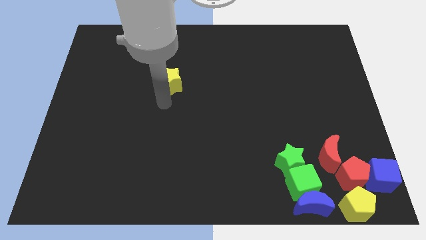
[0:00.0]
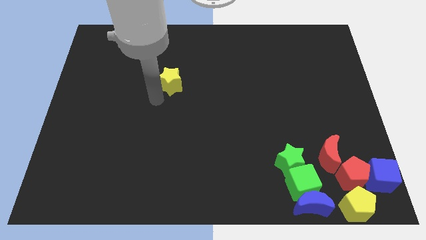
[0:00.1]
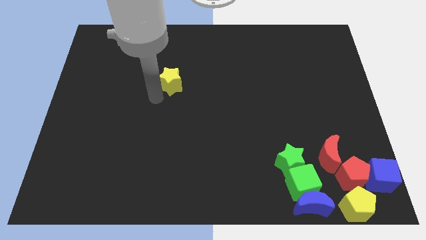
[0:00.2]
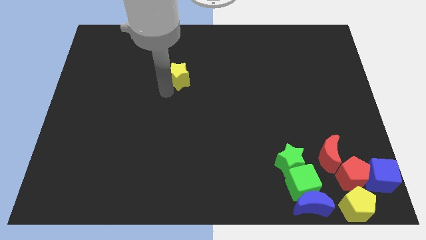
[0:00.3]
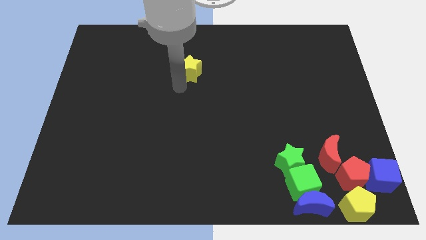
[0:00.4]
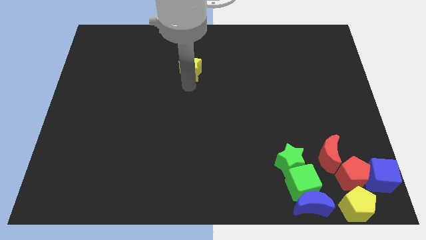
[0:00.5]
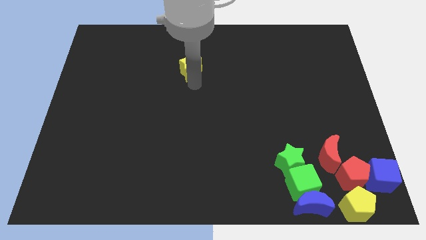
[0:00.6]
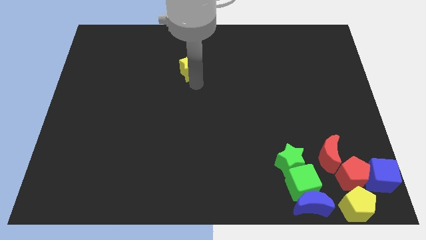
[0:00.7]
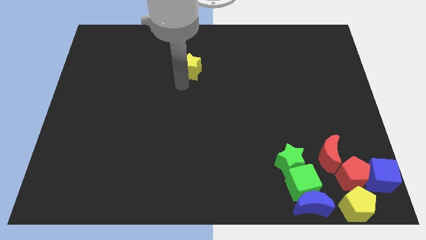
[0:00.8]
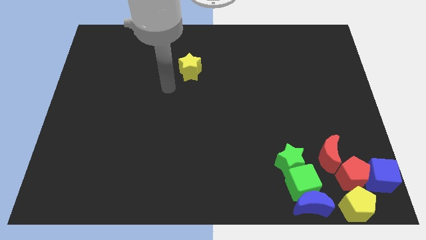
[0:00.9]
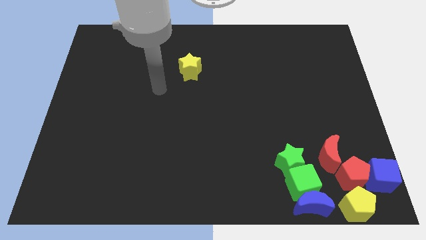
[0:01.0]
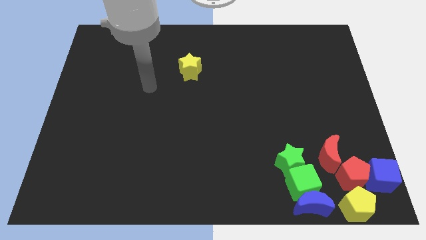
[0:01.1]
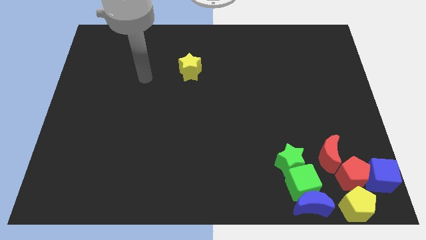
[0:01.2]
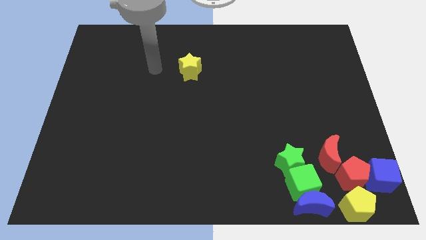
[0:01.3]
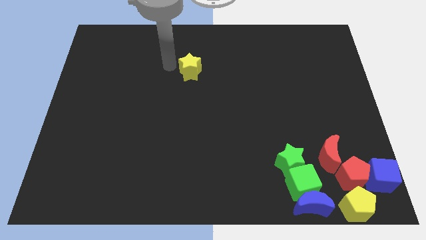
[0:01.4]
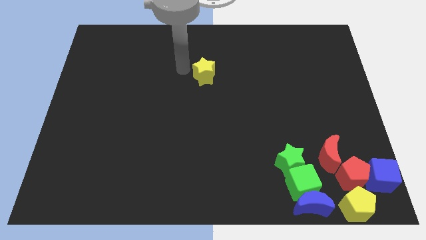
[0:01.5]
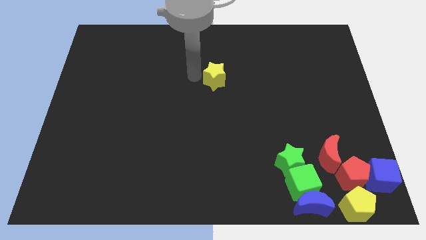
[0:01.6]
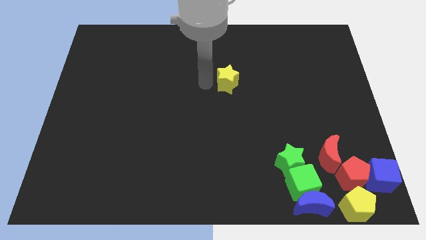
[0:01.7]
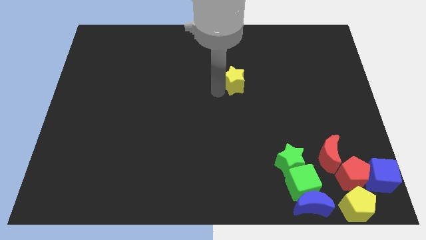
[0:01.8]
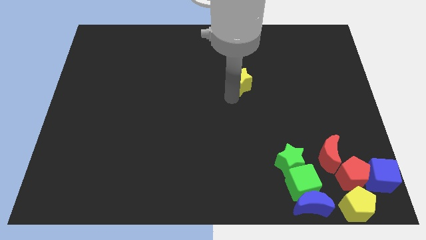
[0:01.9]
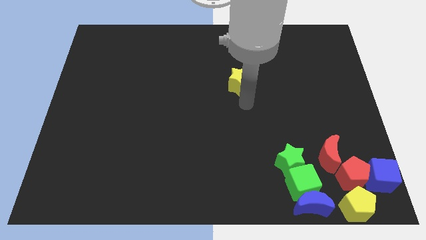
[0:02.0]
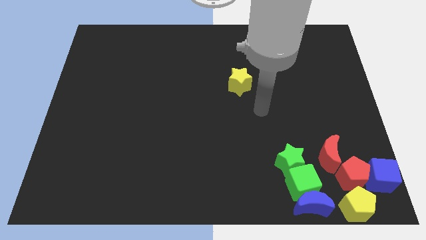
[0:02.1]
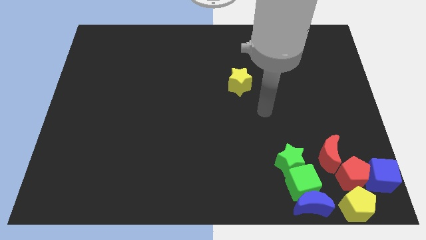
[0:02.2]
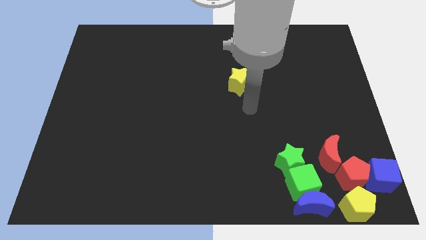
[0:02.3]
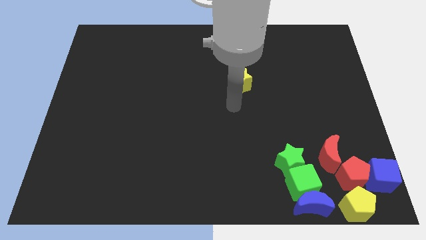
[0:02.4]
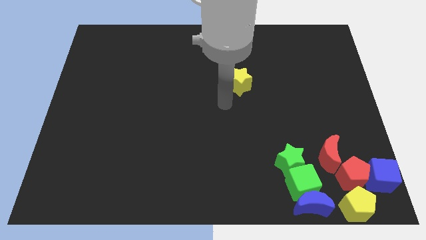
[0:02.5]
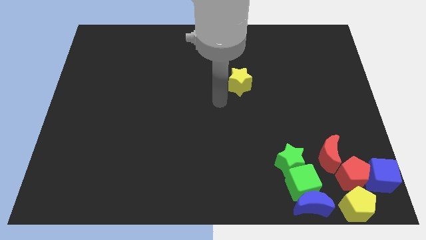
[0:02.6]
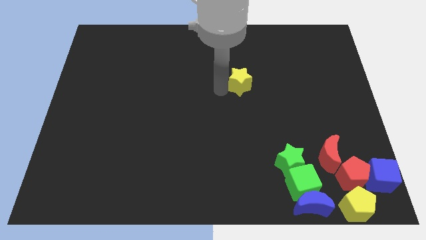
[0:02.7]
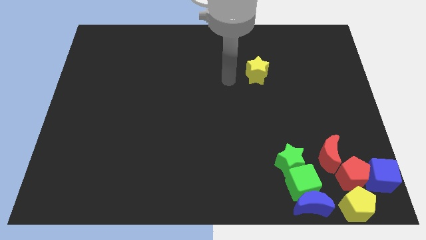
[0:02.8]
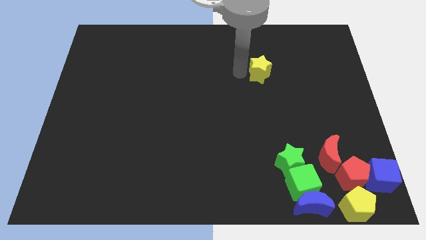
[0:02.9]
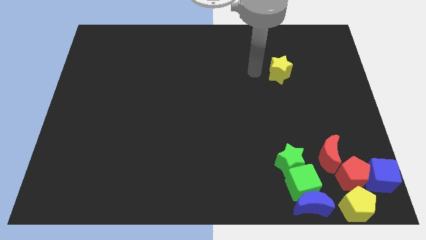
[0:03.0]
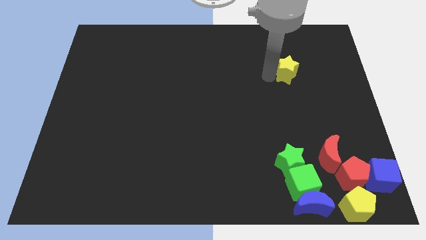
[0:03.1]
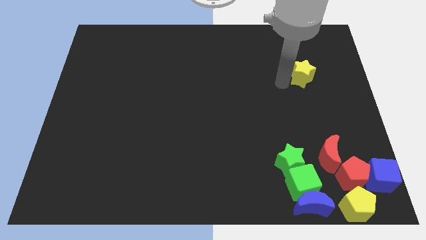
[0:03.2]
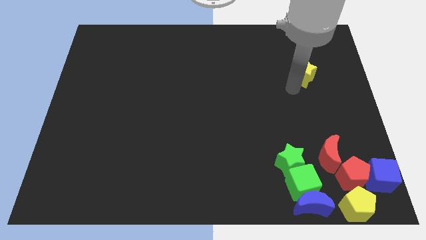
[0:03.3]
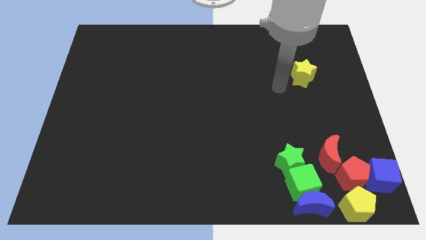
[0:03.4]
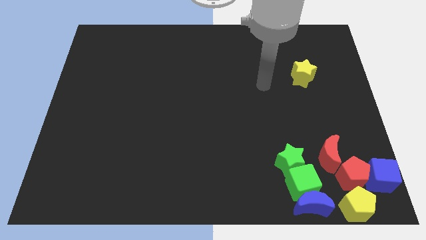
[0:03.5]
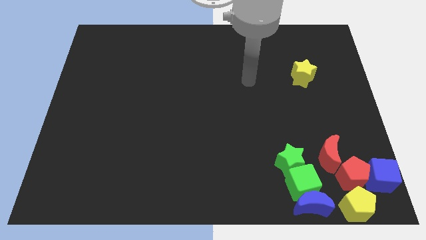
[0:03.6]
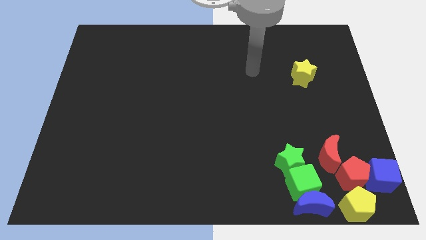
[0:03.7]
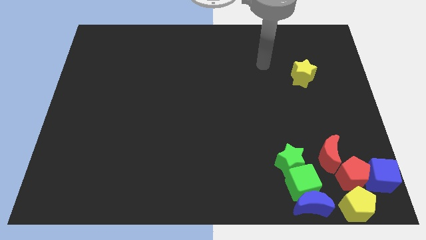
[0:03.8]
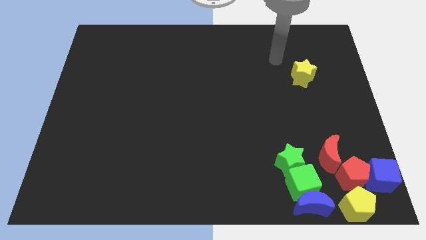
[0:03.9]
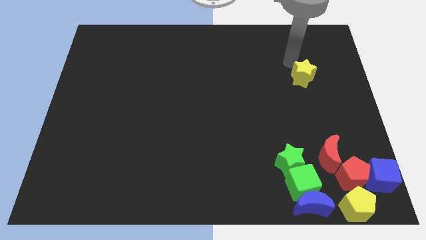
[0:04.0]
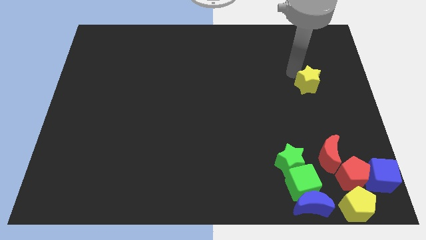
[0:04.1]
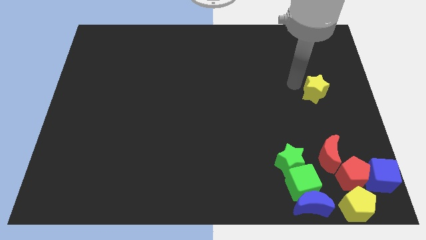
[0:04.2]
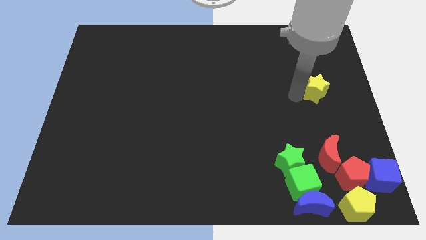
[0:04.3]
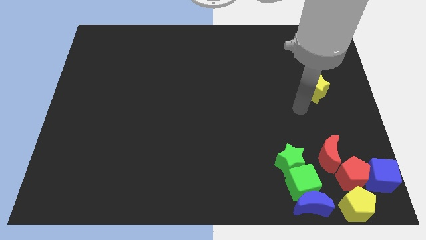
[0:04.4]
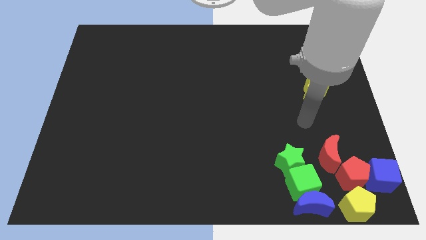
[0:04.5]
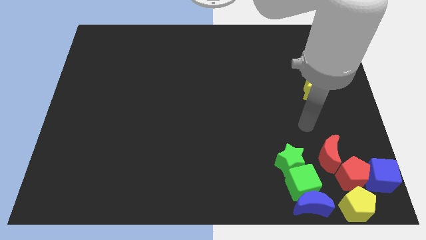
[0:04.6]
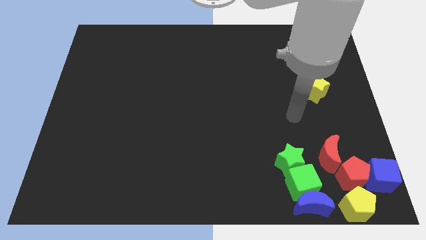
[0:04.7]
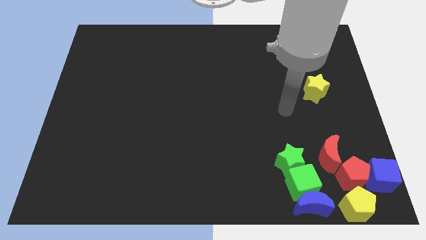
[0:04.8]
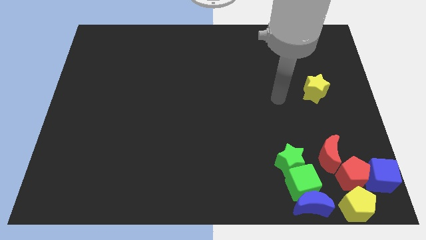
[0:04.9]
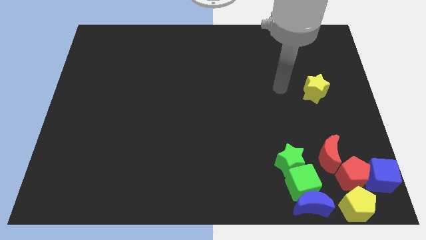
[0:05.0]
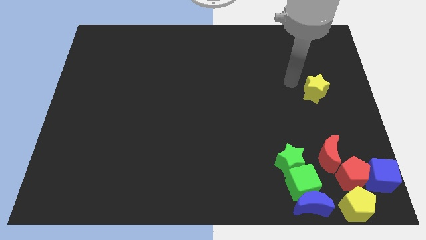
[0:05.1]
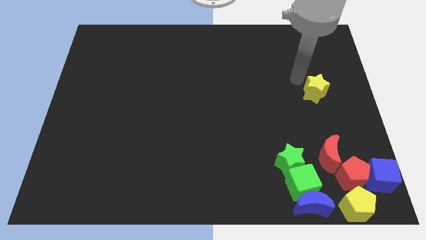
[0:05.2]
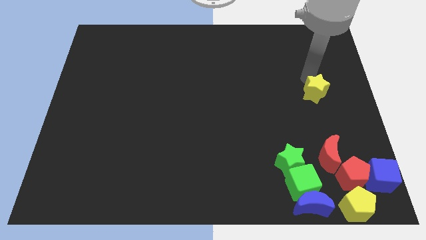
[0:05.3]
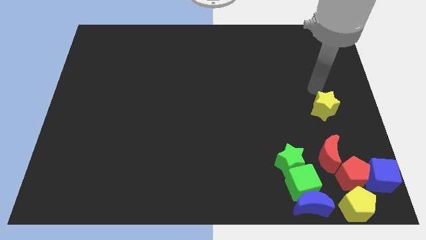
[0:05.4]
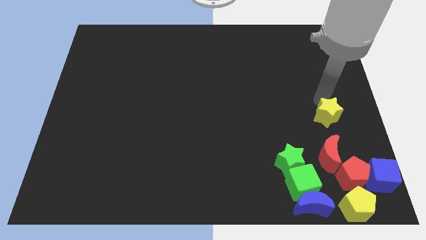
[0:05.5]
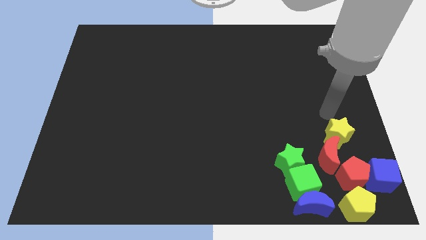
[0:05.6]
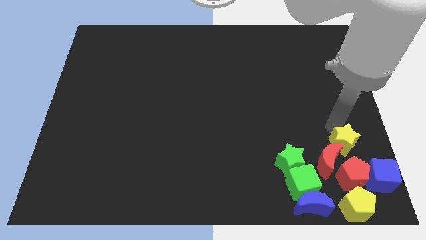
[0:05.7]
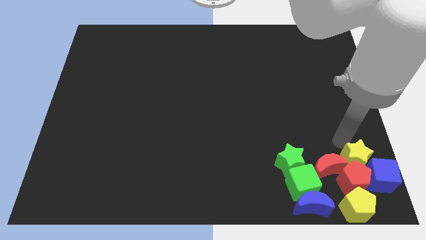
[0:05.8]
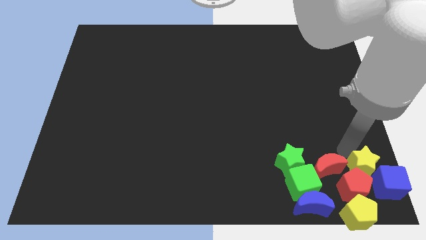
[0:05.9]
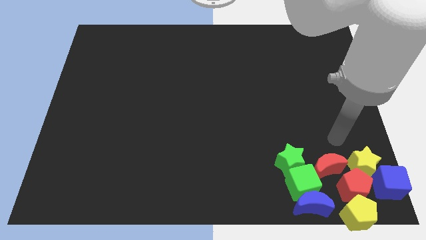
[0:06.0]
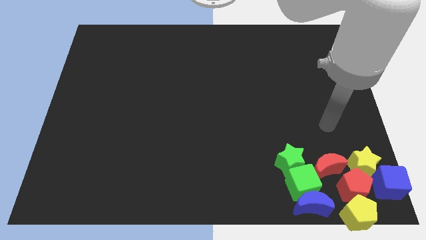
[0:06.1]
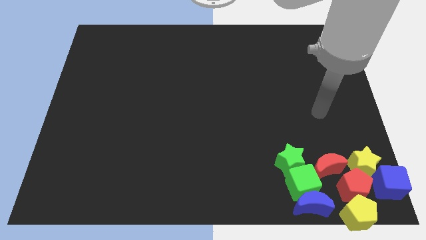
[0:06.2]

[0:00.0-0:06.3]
push the yellow star into the group of blocks

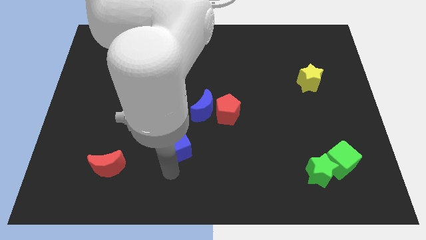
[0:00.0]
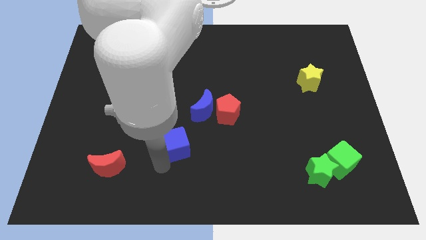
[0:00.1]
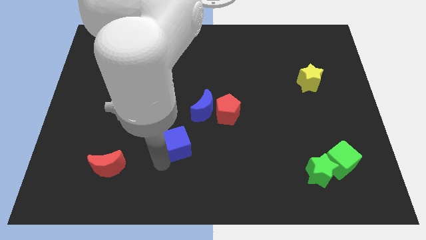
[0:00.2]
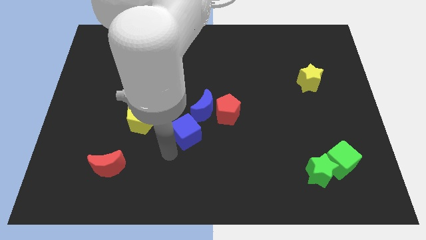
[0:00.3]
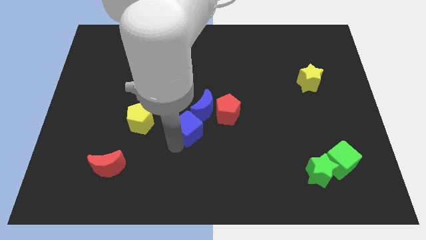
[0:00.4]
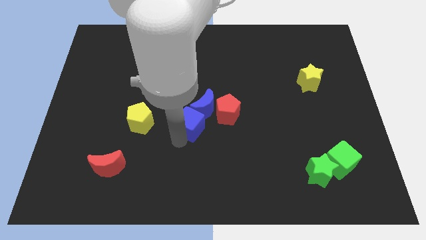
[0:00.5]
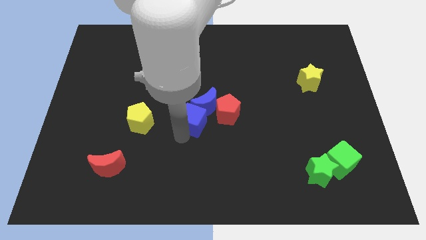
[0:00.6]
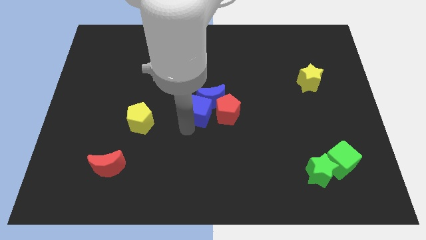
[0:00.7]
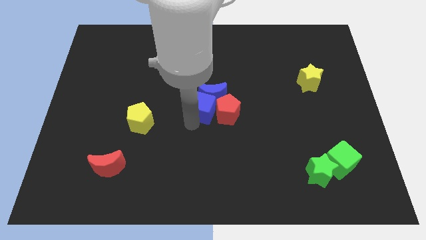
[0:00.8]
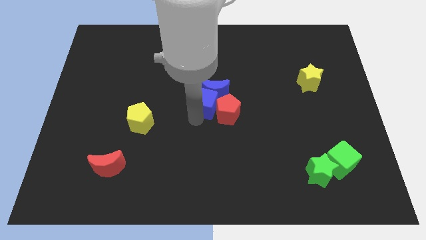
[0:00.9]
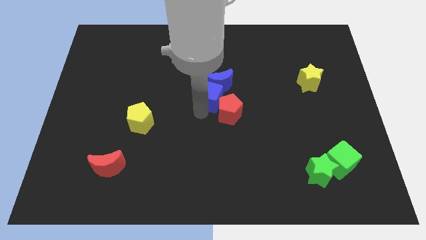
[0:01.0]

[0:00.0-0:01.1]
push blue cube into bottom of blue moon

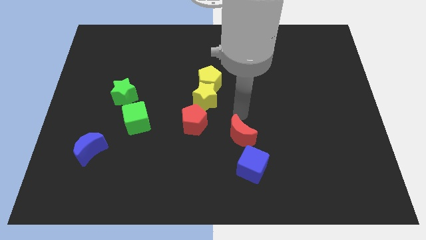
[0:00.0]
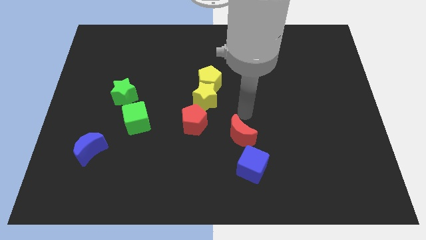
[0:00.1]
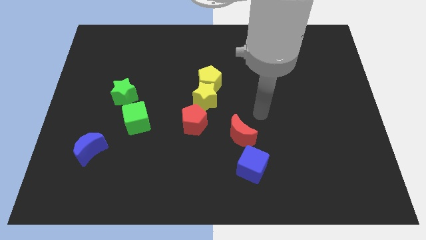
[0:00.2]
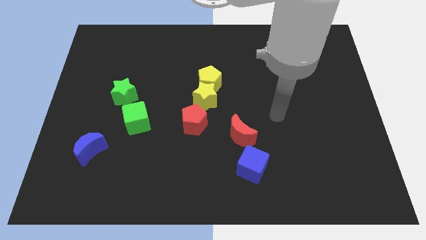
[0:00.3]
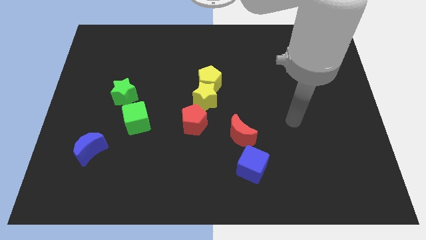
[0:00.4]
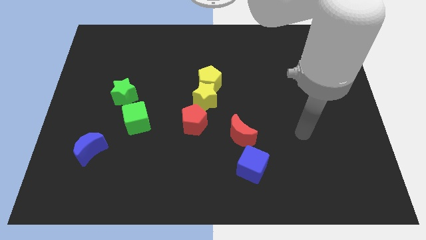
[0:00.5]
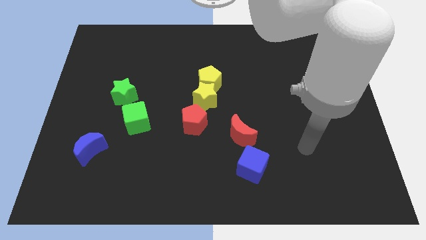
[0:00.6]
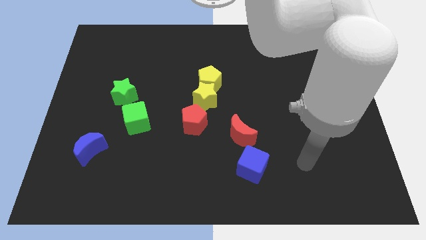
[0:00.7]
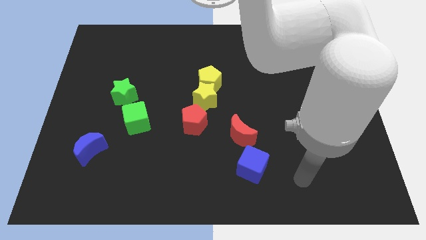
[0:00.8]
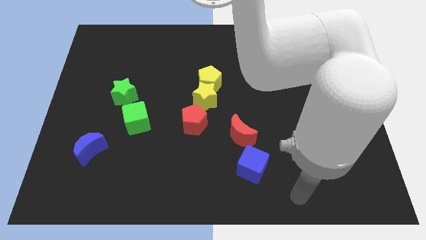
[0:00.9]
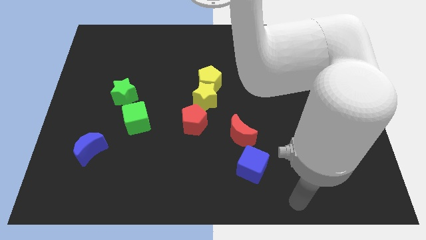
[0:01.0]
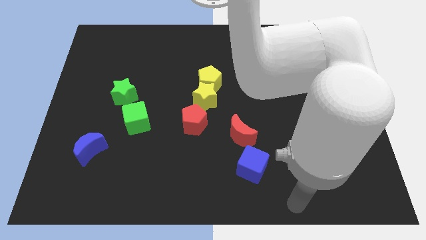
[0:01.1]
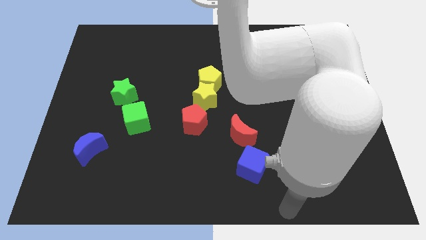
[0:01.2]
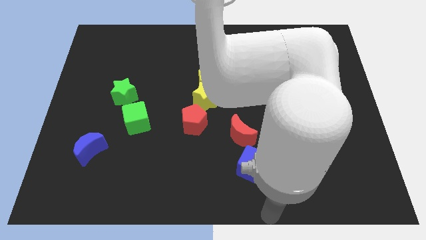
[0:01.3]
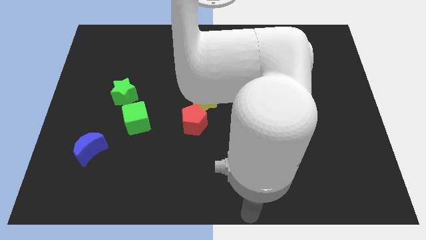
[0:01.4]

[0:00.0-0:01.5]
move your arm to the bottom of blue cube
